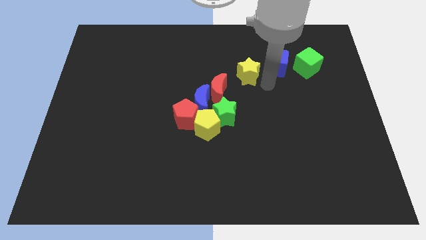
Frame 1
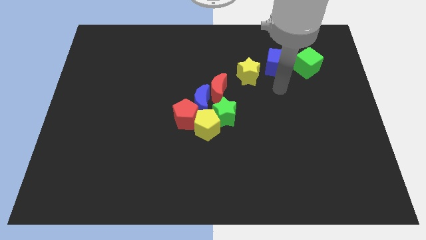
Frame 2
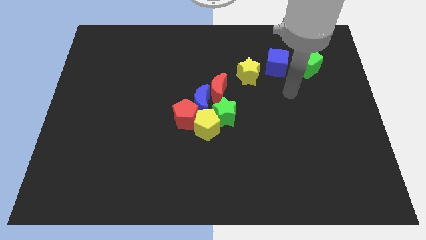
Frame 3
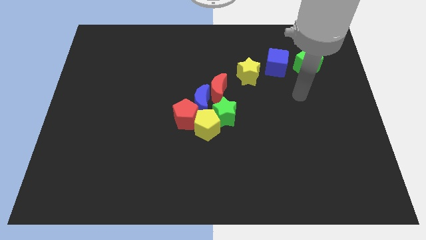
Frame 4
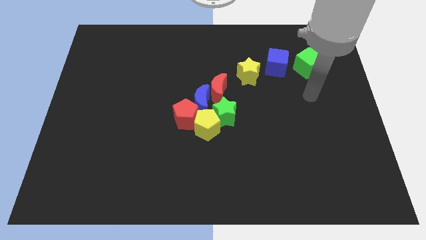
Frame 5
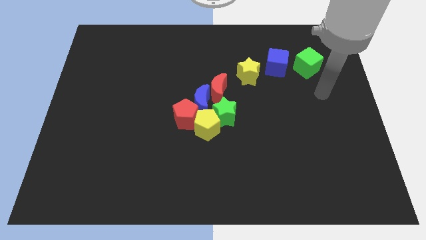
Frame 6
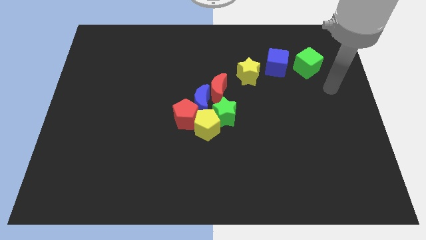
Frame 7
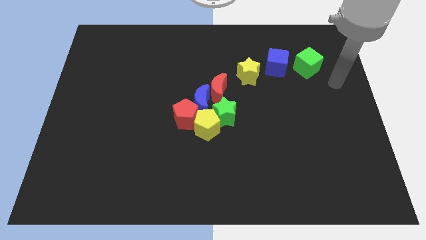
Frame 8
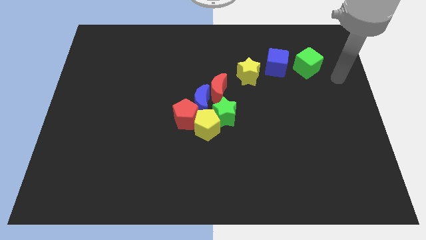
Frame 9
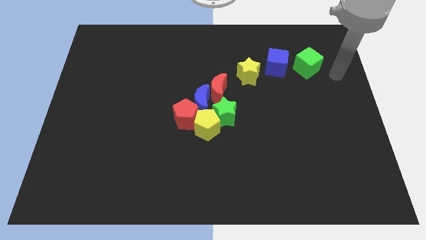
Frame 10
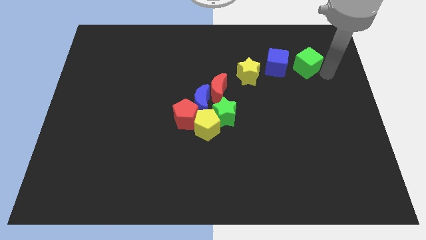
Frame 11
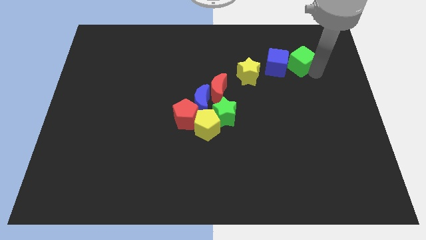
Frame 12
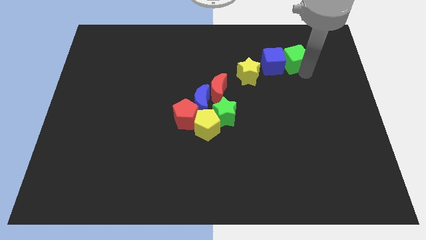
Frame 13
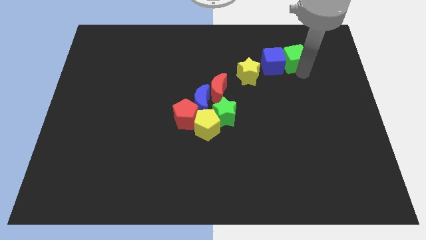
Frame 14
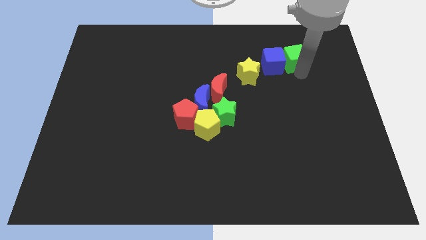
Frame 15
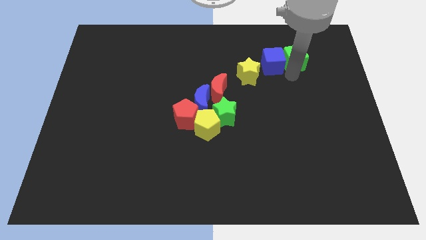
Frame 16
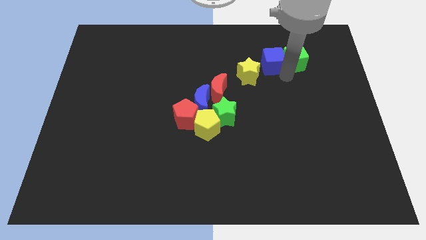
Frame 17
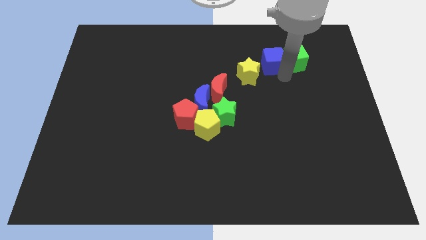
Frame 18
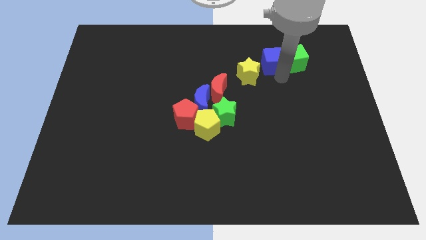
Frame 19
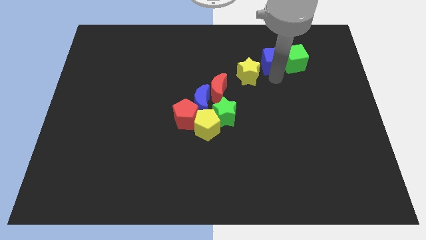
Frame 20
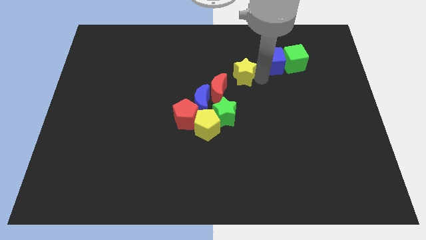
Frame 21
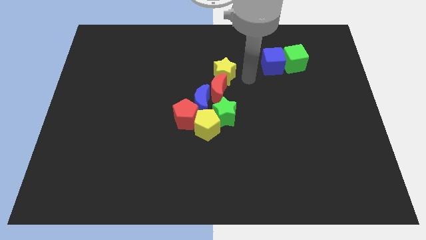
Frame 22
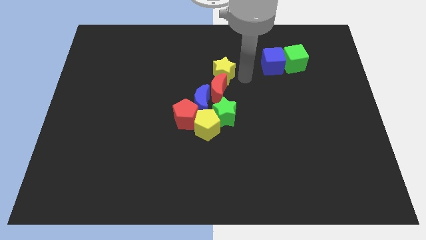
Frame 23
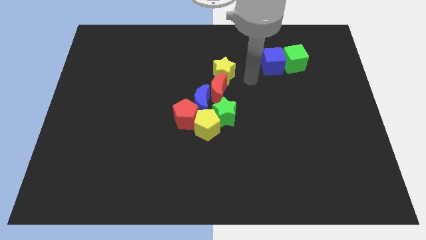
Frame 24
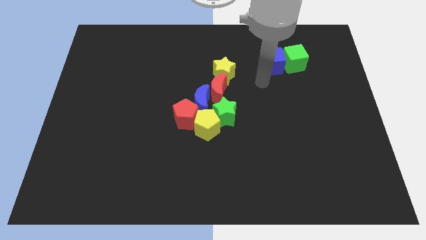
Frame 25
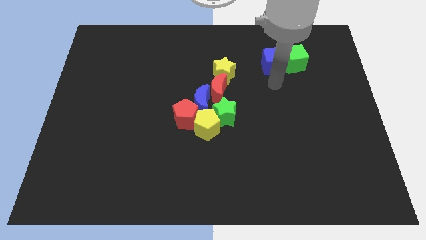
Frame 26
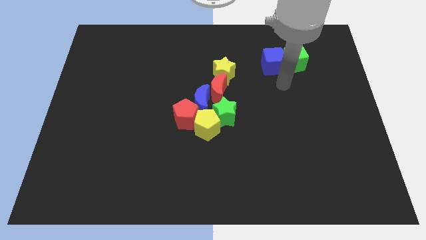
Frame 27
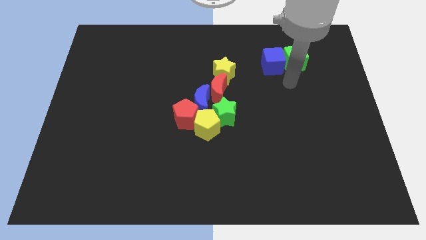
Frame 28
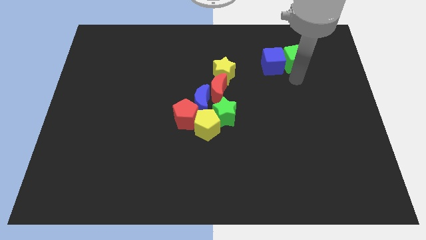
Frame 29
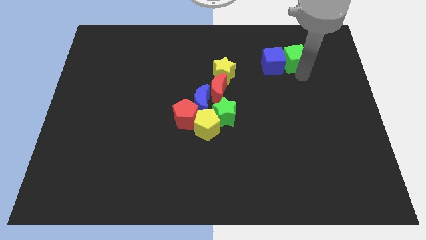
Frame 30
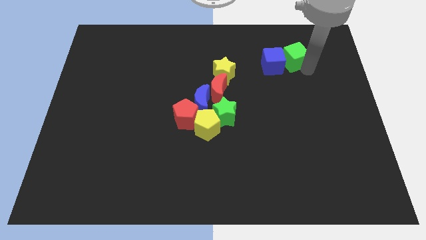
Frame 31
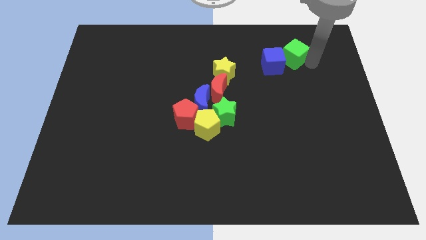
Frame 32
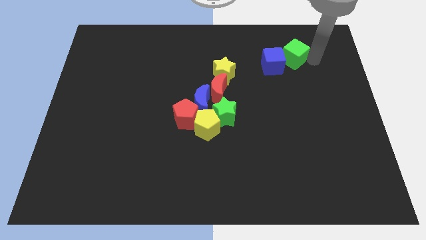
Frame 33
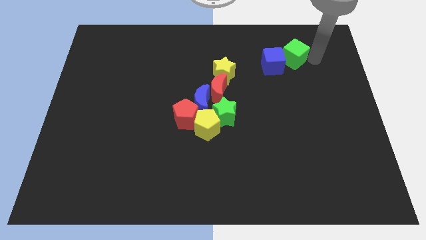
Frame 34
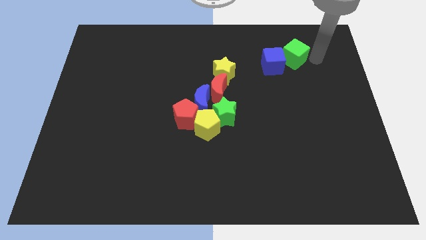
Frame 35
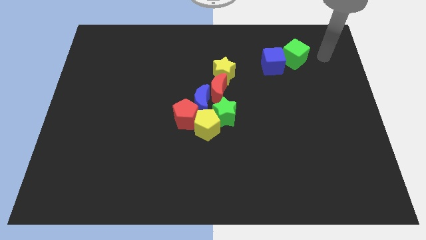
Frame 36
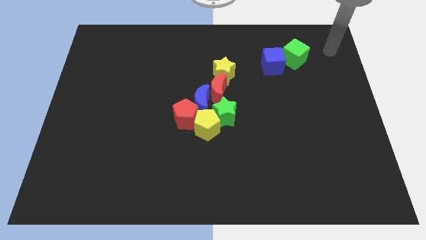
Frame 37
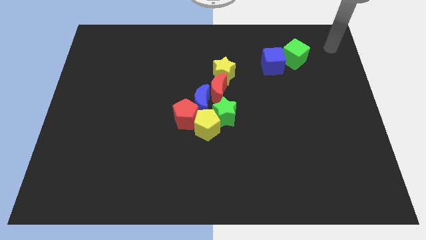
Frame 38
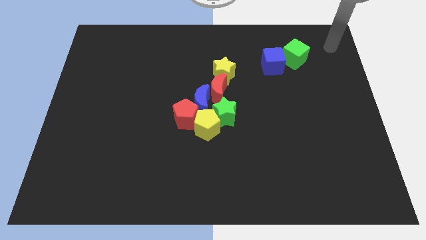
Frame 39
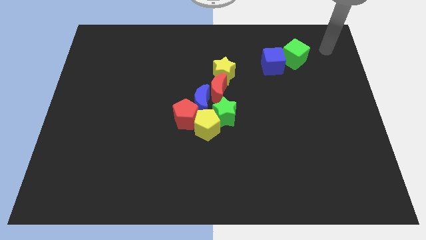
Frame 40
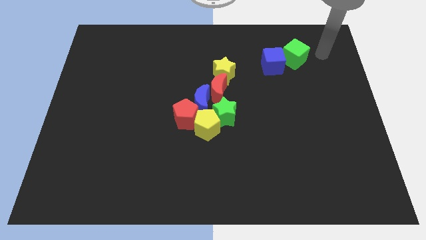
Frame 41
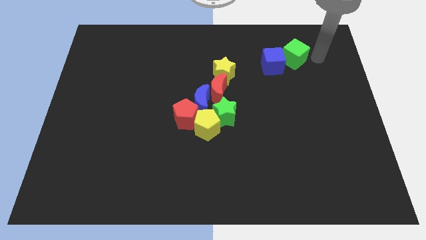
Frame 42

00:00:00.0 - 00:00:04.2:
separate the yellow star from blue cube

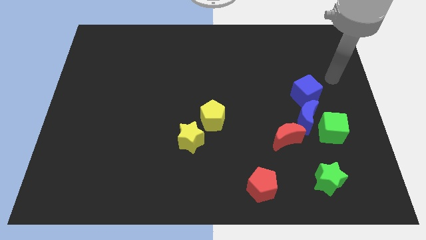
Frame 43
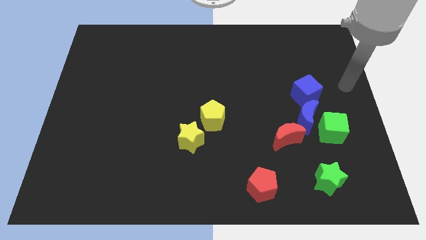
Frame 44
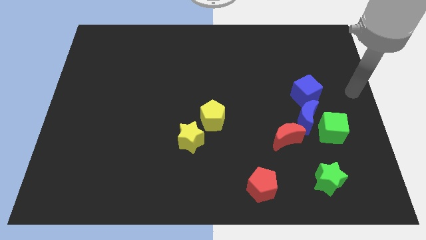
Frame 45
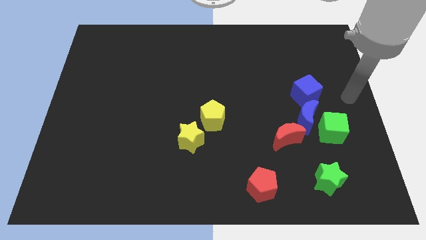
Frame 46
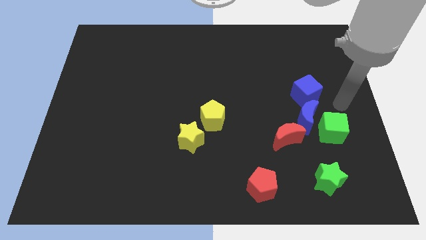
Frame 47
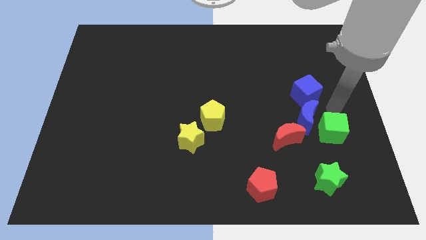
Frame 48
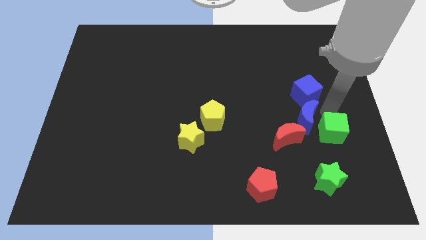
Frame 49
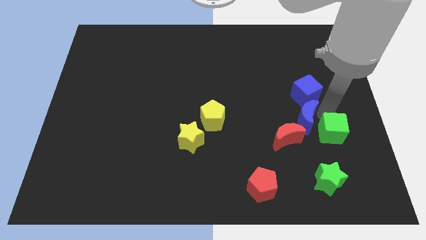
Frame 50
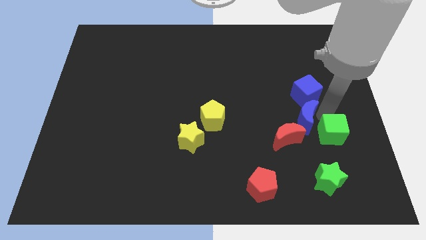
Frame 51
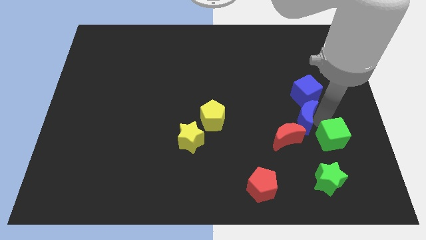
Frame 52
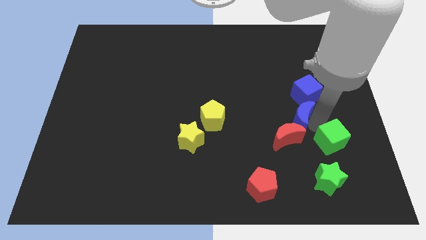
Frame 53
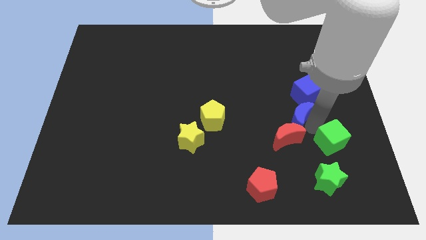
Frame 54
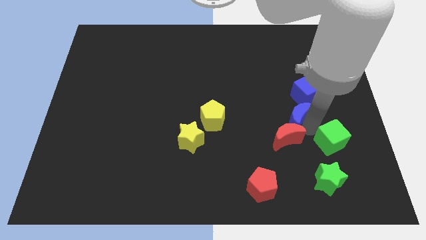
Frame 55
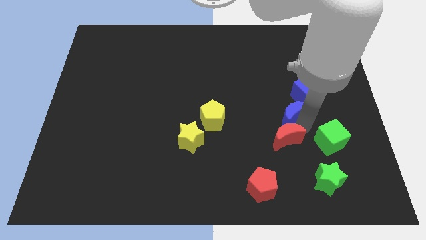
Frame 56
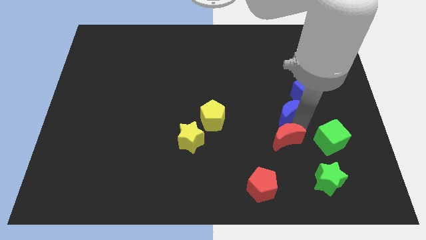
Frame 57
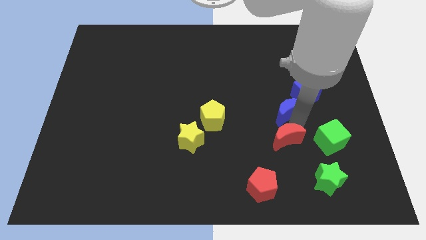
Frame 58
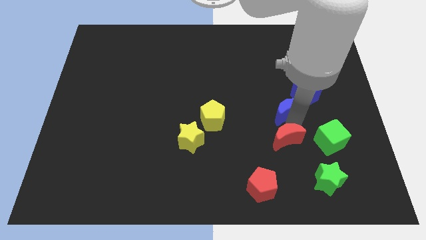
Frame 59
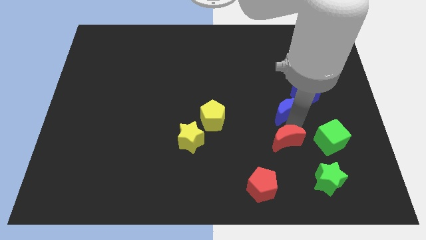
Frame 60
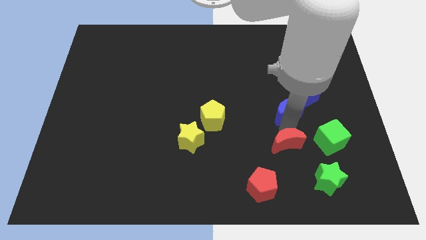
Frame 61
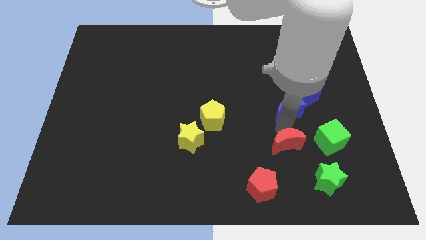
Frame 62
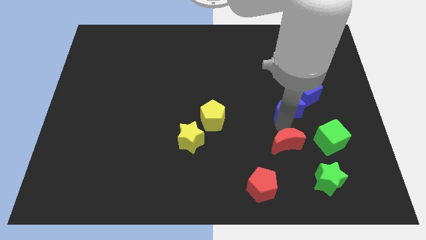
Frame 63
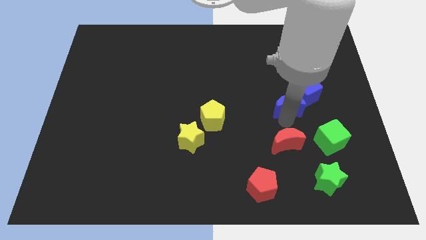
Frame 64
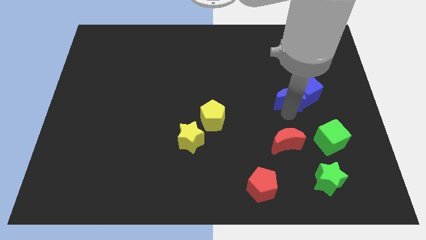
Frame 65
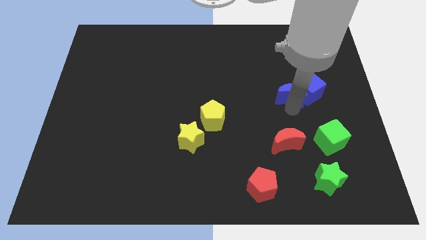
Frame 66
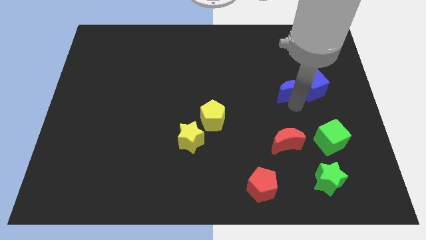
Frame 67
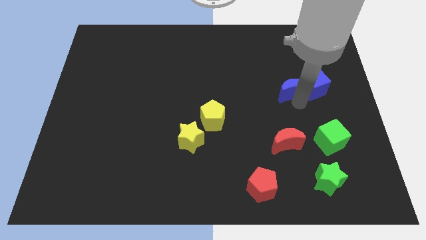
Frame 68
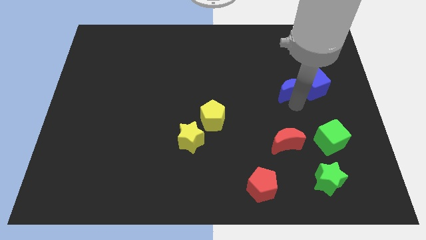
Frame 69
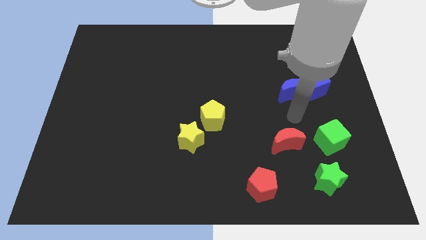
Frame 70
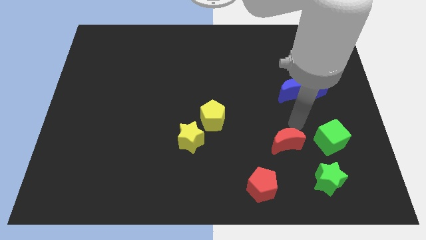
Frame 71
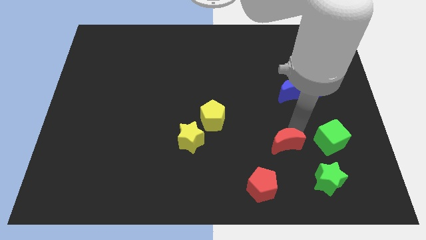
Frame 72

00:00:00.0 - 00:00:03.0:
go and move the group of blue blocks away from the red moon

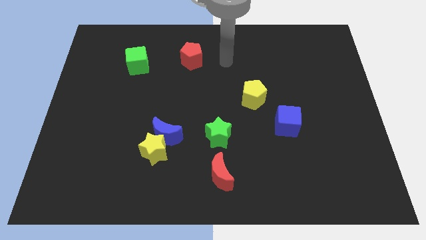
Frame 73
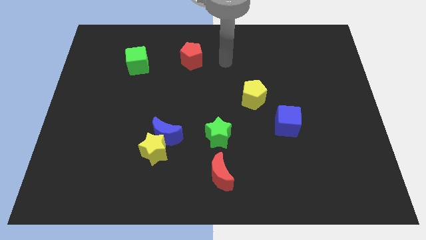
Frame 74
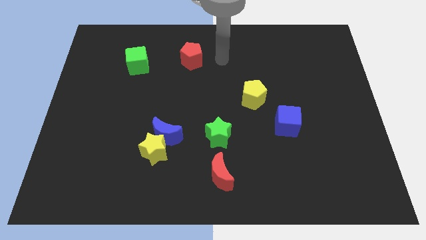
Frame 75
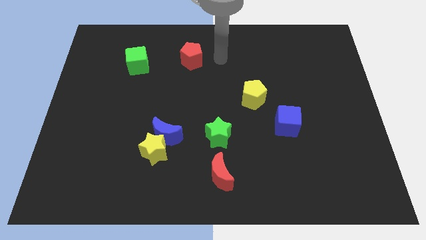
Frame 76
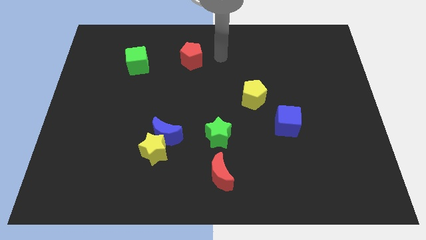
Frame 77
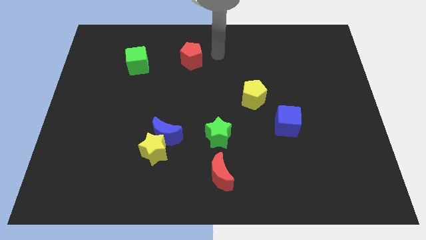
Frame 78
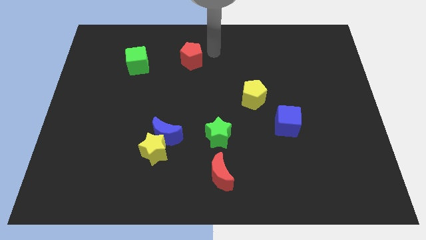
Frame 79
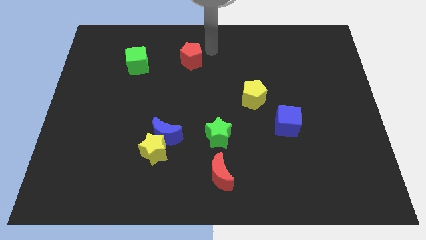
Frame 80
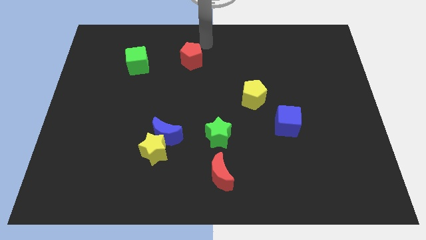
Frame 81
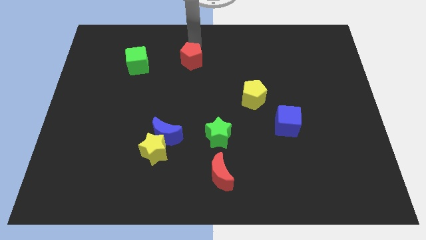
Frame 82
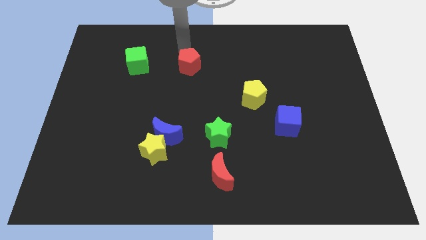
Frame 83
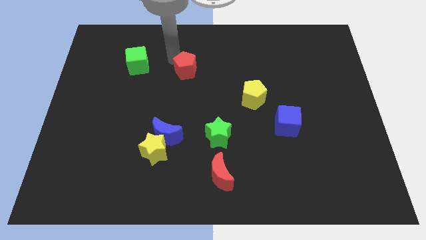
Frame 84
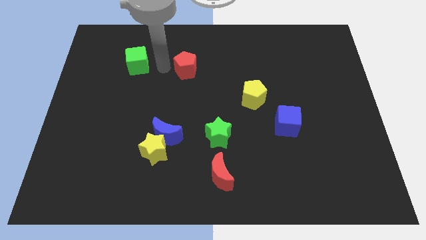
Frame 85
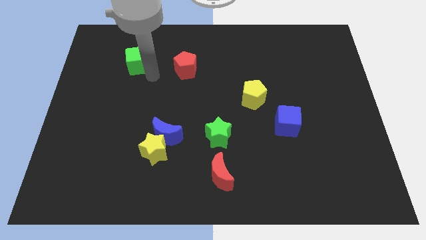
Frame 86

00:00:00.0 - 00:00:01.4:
push the red pentagon slightly to the bottom side of the board

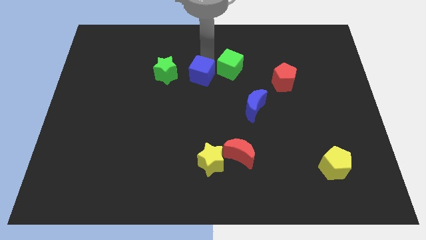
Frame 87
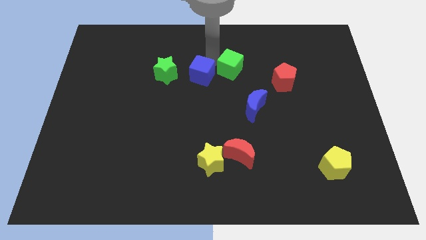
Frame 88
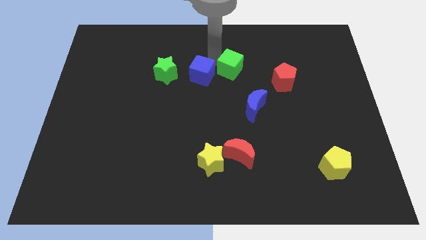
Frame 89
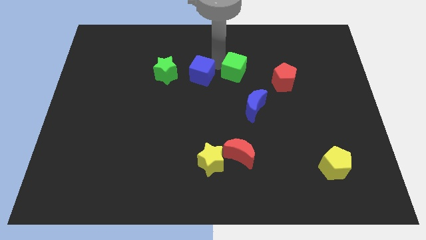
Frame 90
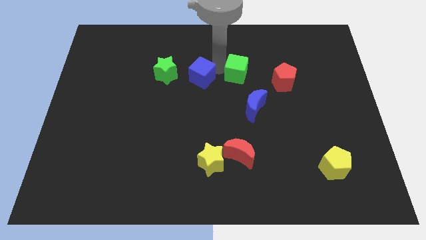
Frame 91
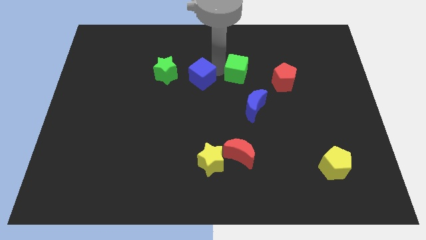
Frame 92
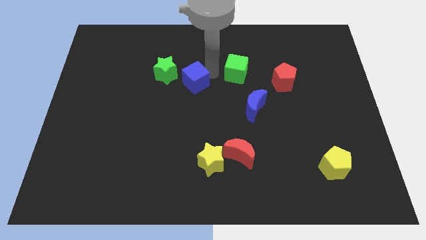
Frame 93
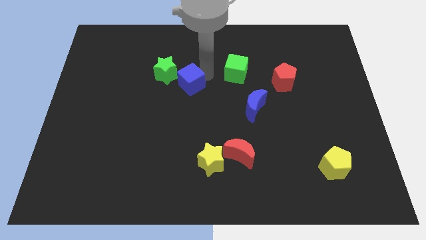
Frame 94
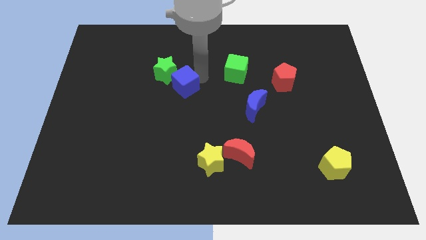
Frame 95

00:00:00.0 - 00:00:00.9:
separate blue cube from green cube
